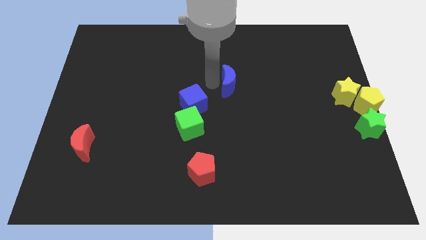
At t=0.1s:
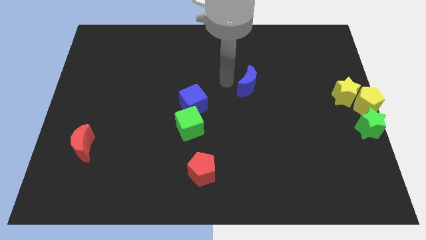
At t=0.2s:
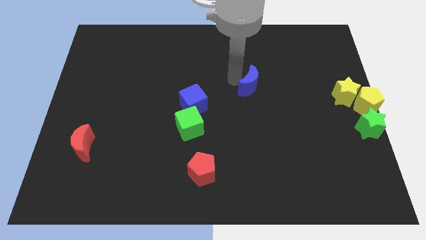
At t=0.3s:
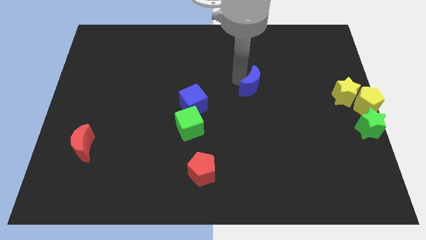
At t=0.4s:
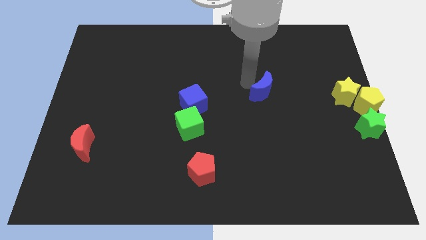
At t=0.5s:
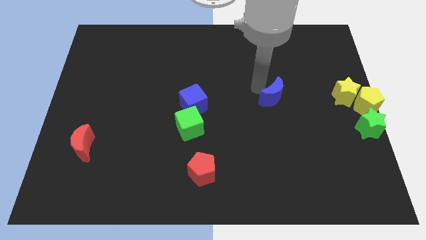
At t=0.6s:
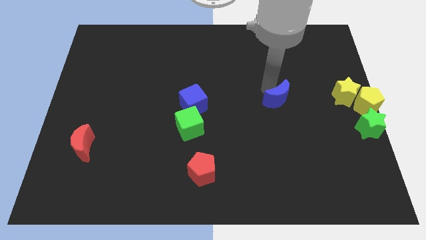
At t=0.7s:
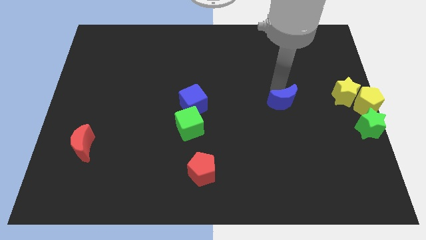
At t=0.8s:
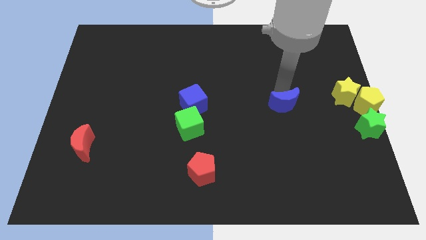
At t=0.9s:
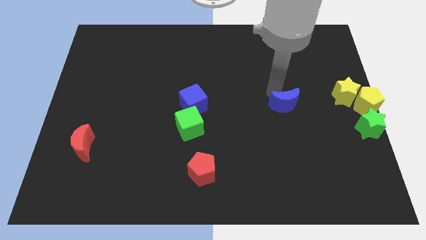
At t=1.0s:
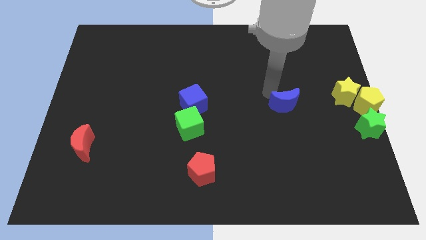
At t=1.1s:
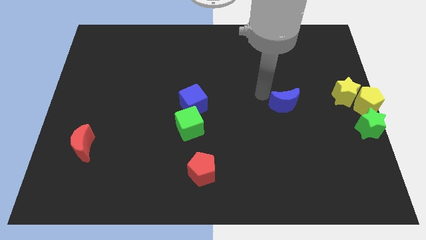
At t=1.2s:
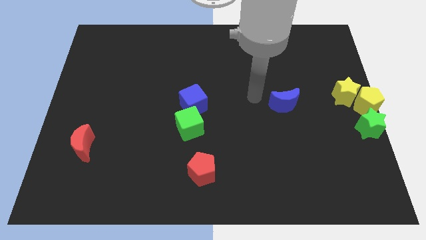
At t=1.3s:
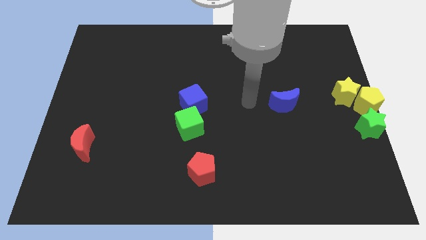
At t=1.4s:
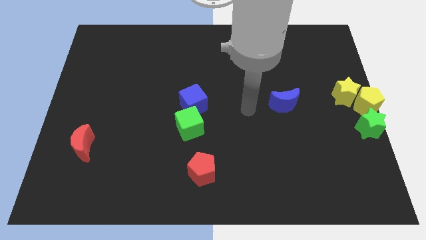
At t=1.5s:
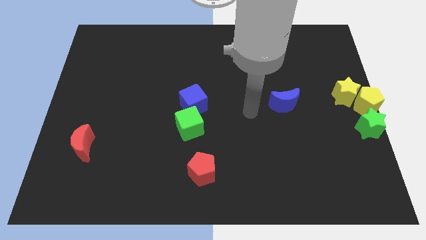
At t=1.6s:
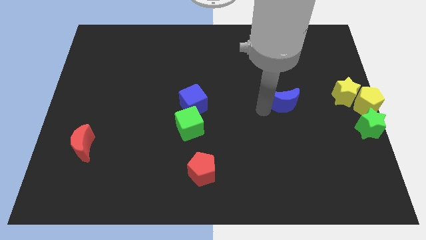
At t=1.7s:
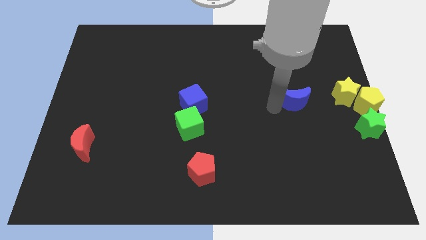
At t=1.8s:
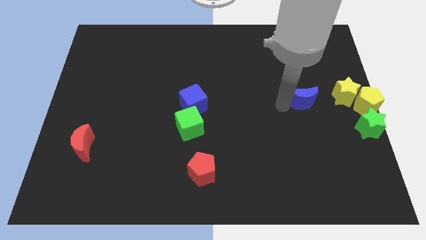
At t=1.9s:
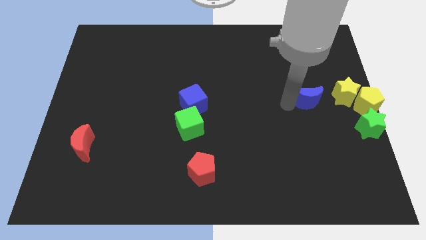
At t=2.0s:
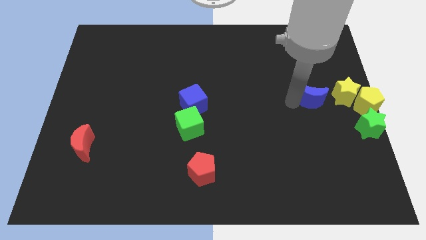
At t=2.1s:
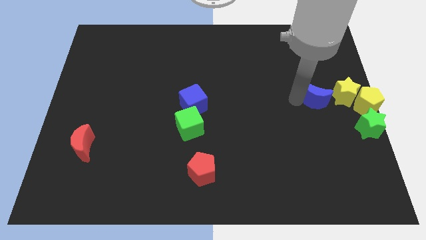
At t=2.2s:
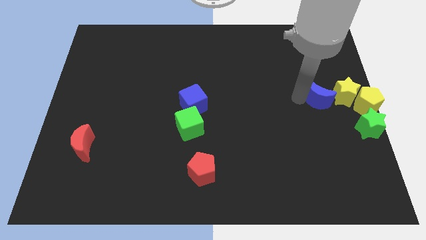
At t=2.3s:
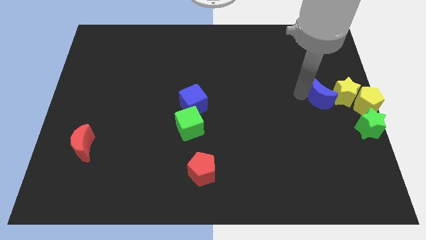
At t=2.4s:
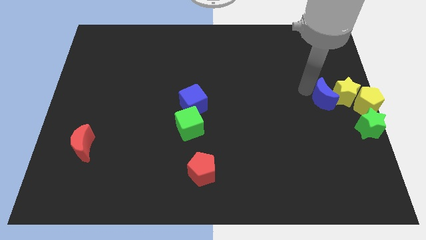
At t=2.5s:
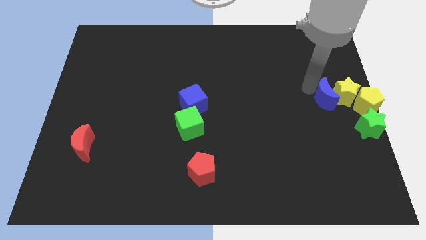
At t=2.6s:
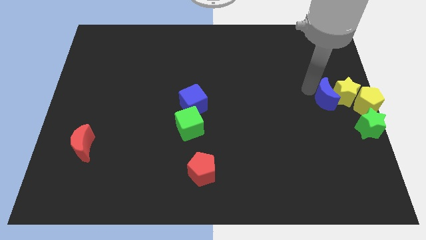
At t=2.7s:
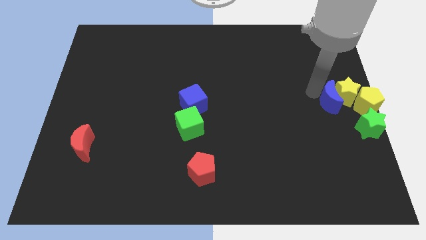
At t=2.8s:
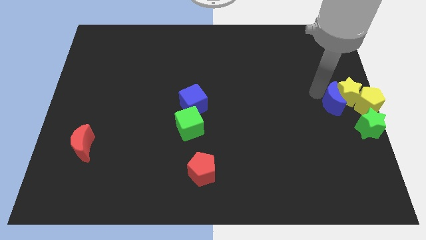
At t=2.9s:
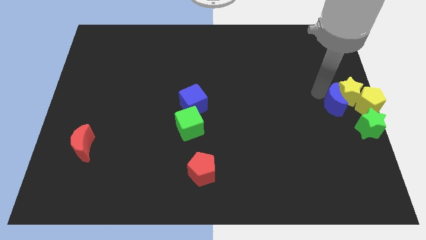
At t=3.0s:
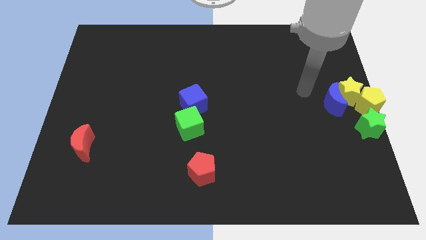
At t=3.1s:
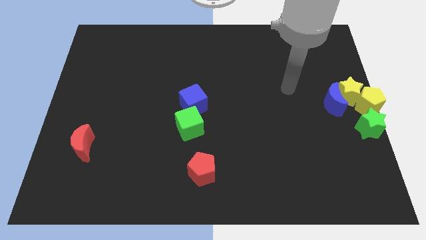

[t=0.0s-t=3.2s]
move the blue crescent towards the yellow star

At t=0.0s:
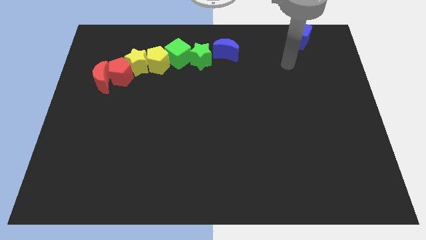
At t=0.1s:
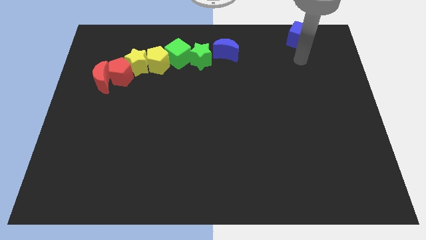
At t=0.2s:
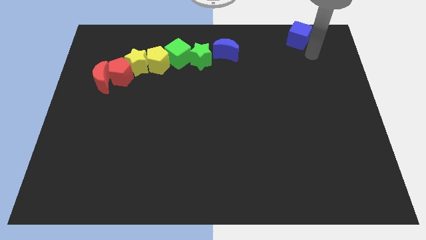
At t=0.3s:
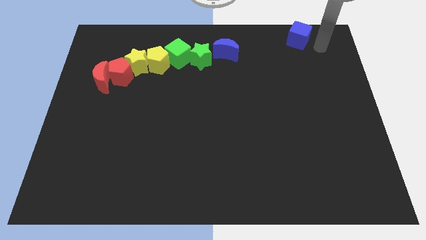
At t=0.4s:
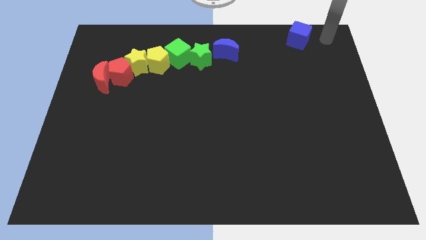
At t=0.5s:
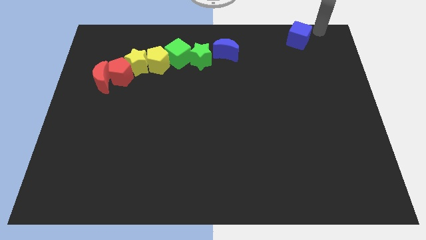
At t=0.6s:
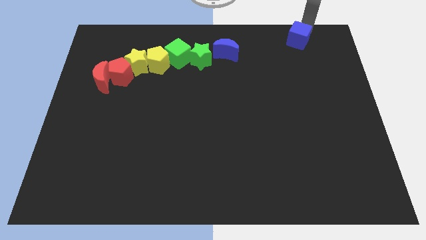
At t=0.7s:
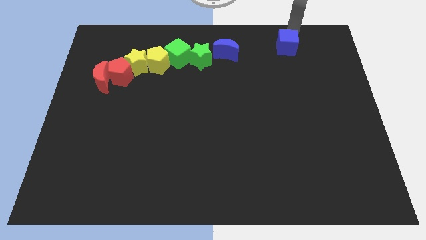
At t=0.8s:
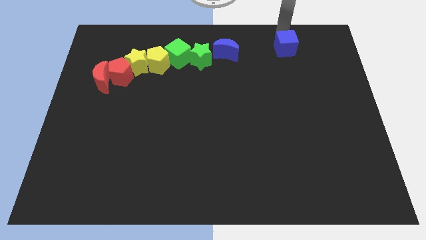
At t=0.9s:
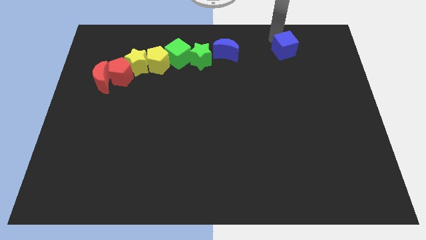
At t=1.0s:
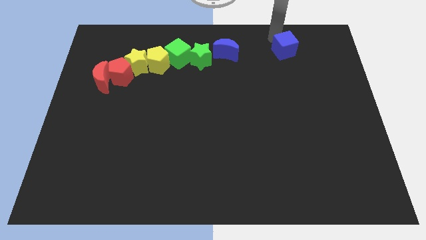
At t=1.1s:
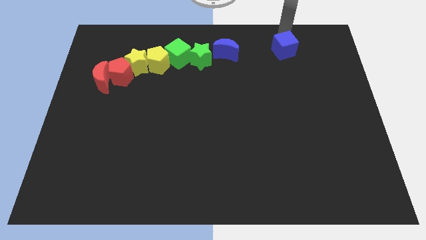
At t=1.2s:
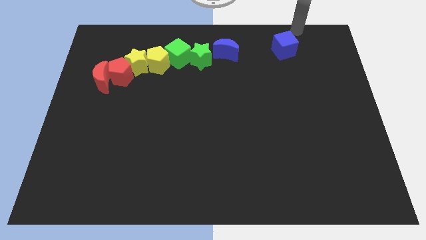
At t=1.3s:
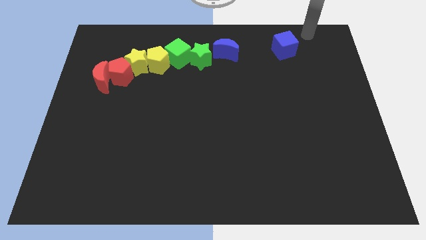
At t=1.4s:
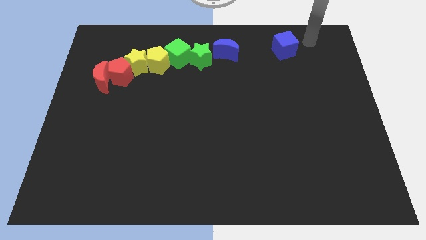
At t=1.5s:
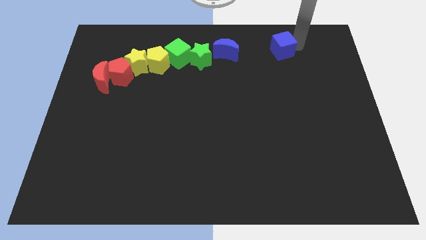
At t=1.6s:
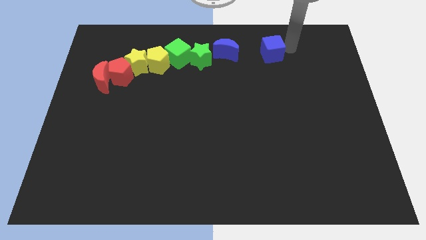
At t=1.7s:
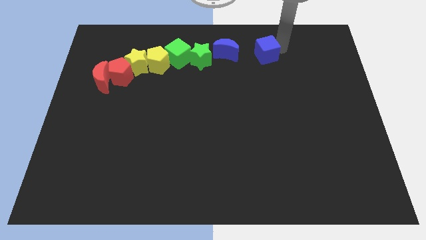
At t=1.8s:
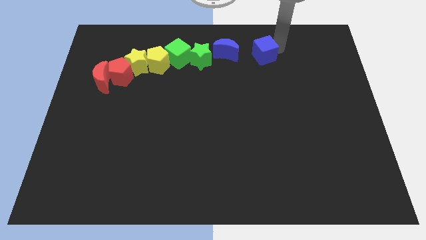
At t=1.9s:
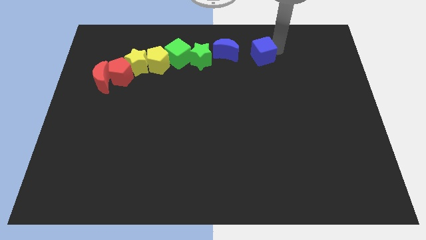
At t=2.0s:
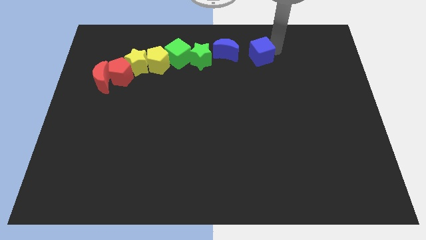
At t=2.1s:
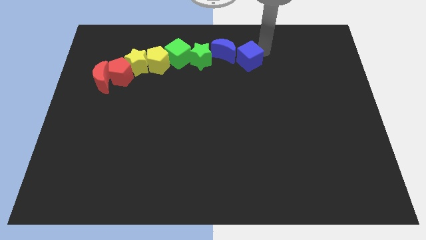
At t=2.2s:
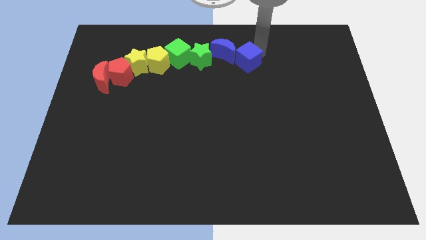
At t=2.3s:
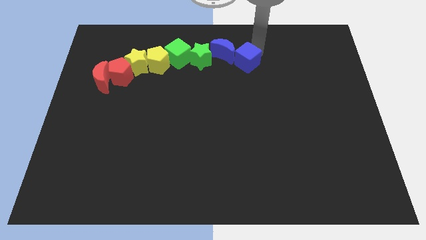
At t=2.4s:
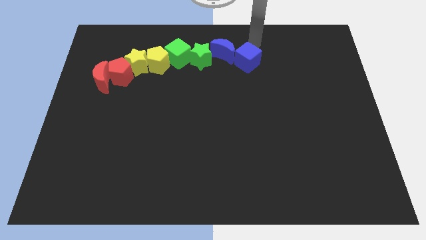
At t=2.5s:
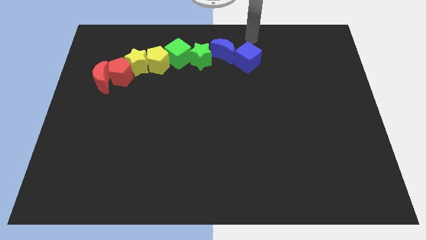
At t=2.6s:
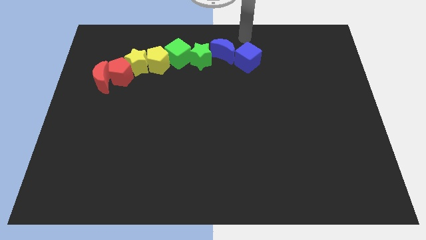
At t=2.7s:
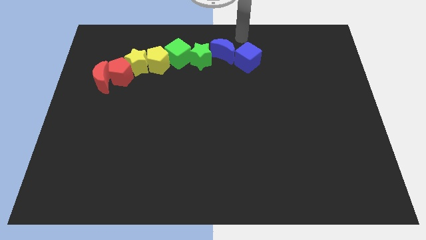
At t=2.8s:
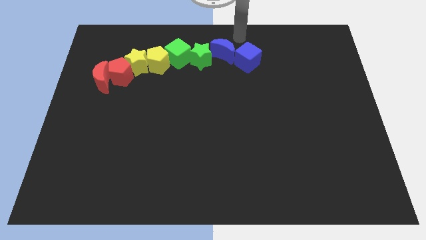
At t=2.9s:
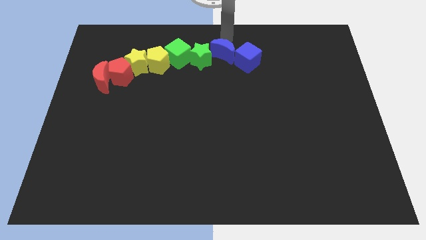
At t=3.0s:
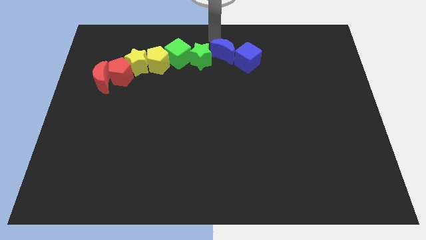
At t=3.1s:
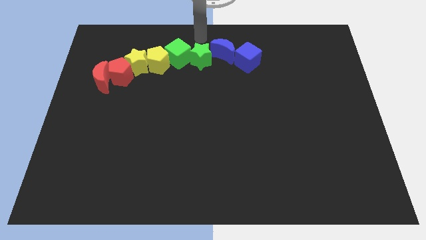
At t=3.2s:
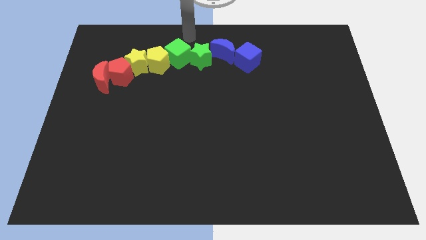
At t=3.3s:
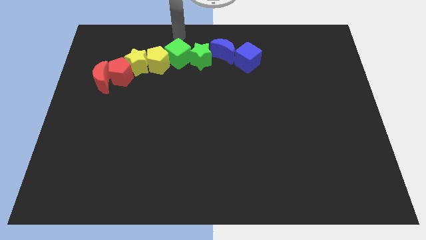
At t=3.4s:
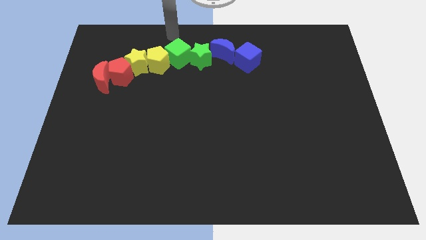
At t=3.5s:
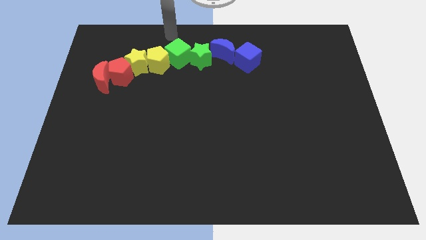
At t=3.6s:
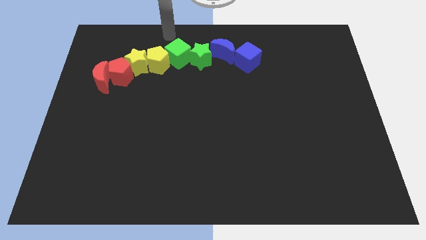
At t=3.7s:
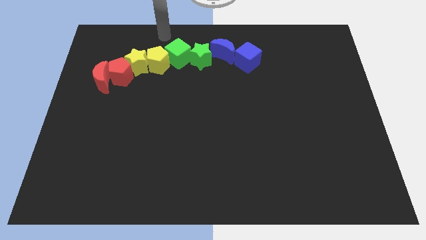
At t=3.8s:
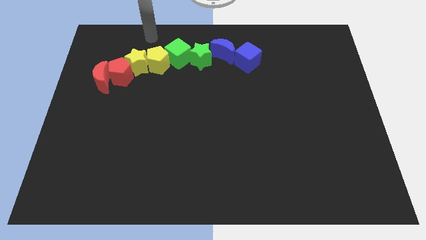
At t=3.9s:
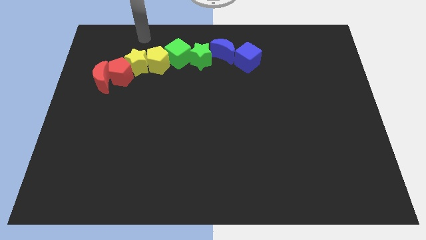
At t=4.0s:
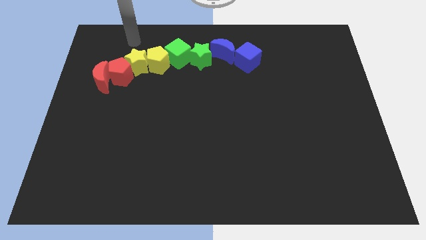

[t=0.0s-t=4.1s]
push blue blocks on the right side of the green blocks

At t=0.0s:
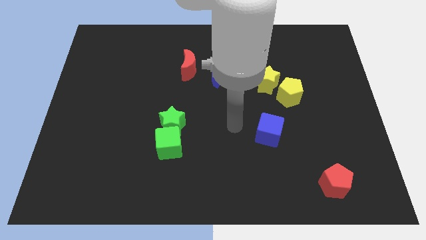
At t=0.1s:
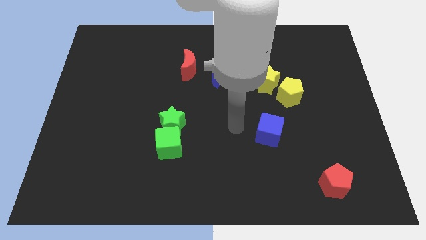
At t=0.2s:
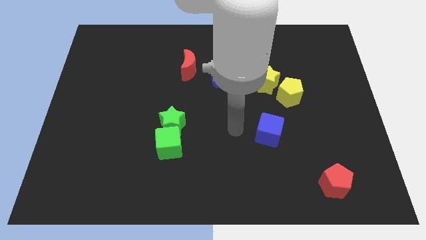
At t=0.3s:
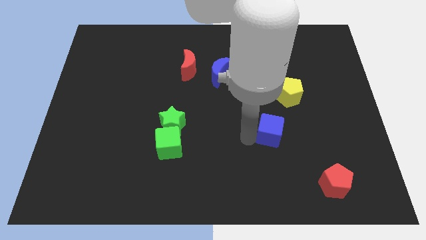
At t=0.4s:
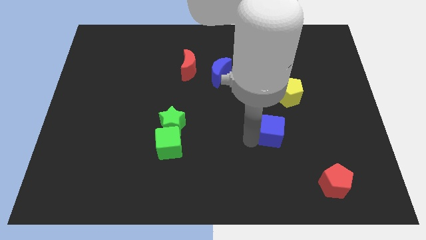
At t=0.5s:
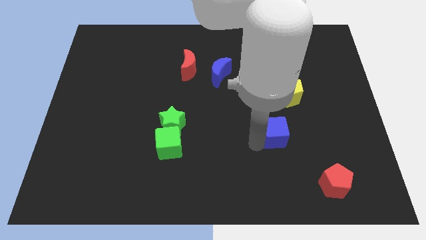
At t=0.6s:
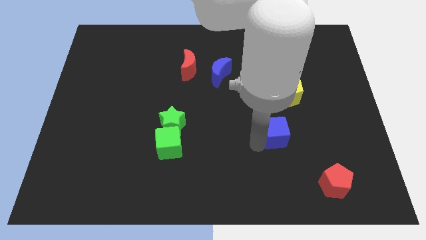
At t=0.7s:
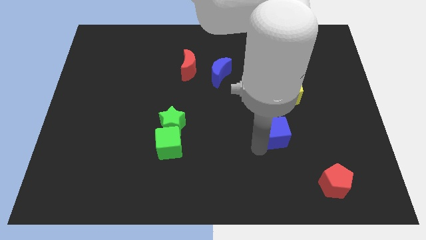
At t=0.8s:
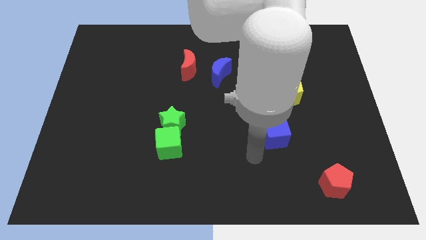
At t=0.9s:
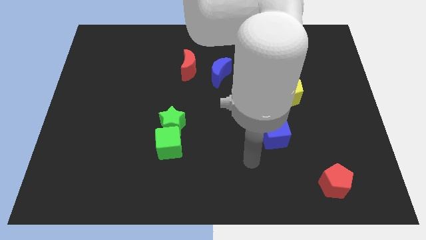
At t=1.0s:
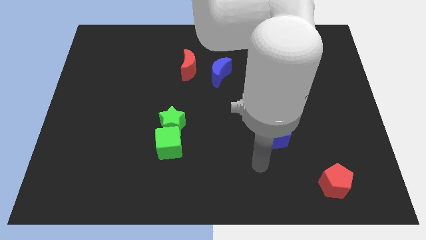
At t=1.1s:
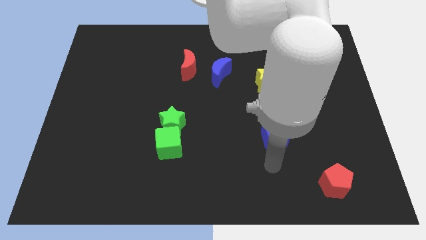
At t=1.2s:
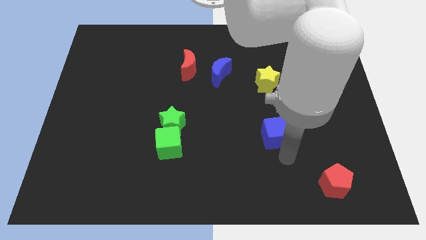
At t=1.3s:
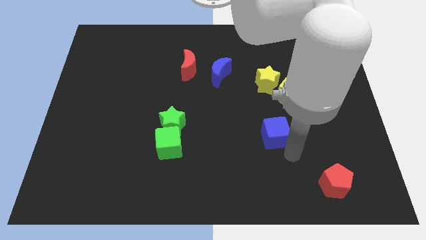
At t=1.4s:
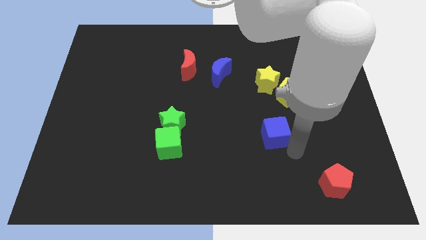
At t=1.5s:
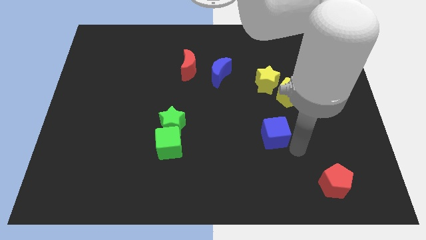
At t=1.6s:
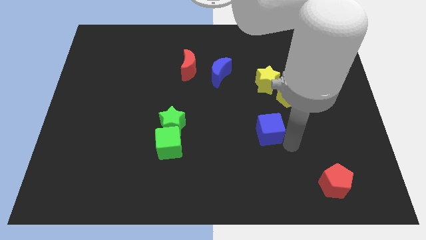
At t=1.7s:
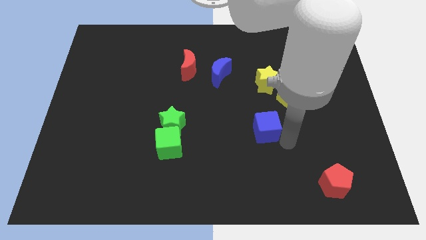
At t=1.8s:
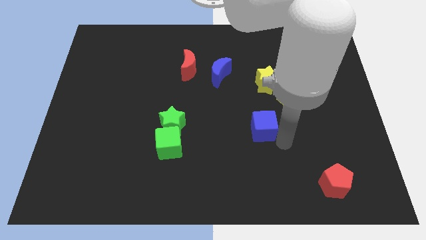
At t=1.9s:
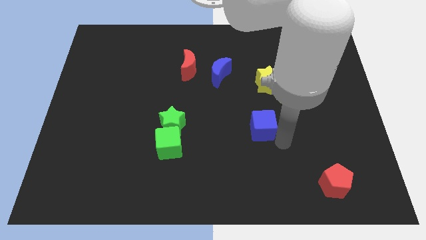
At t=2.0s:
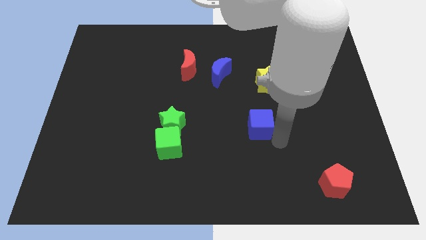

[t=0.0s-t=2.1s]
move the blue cube to the top of the board
